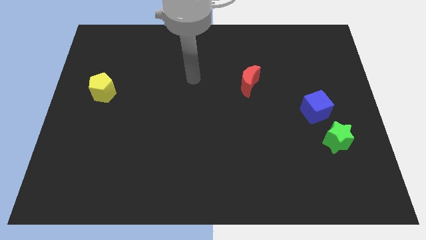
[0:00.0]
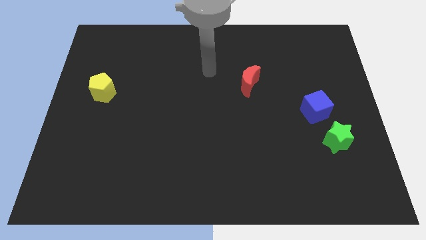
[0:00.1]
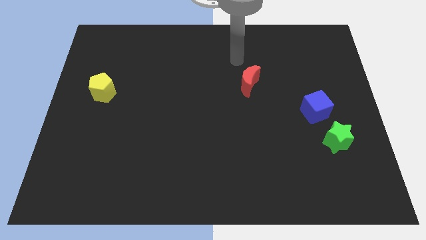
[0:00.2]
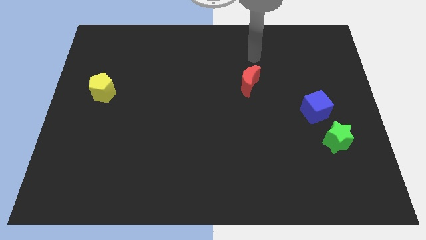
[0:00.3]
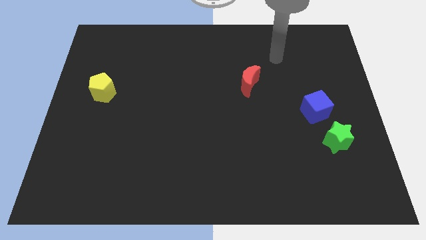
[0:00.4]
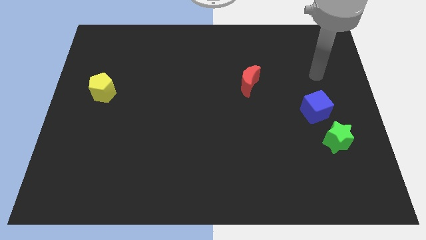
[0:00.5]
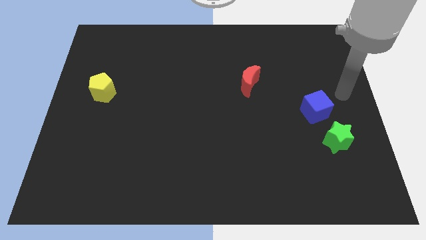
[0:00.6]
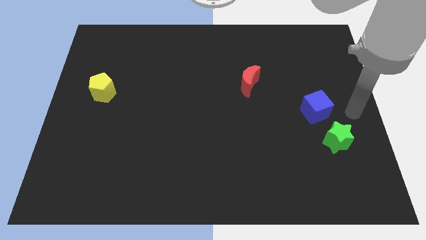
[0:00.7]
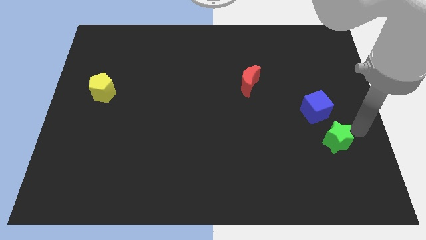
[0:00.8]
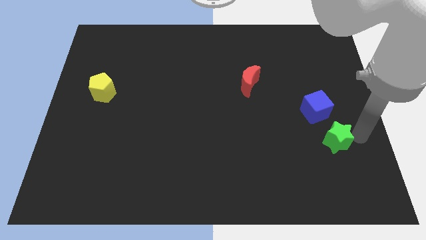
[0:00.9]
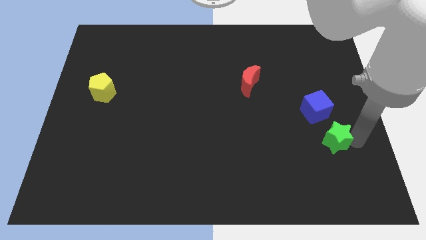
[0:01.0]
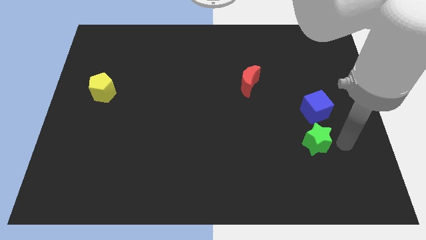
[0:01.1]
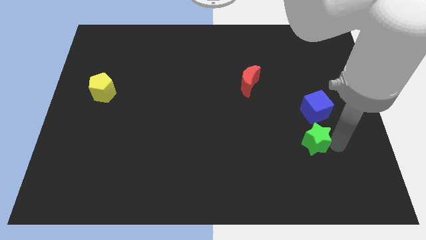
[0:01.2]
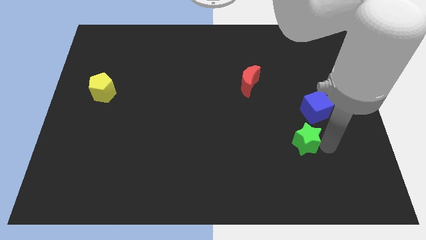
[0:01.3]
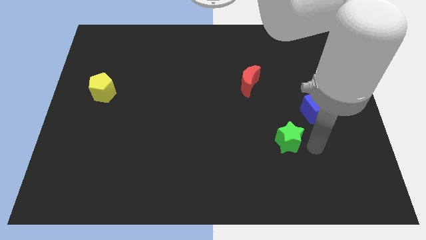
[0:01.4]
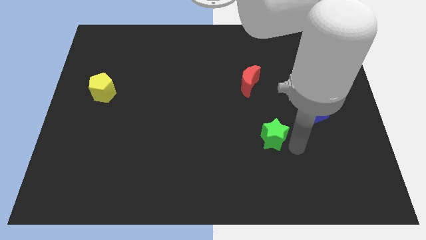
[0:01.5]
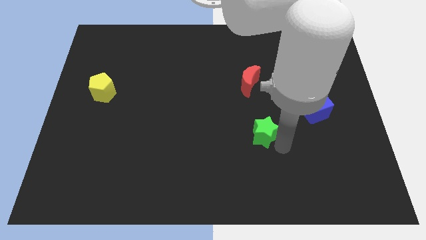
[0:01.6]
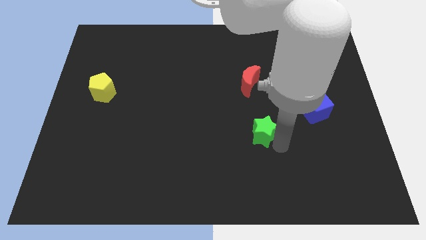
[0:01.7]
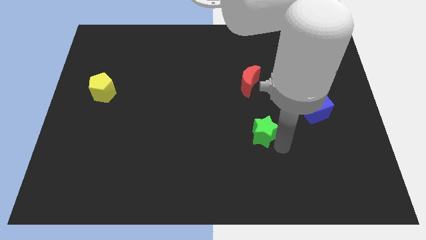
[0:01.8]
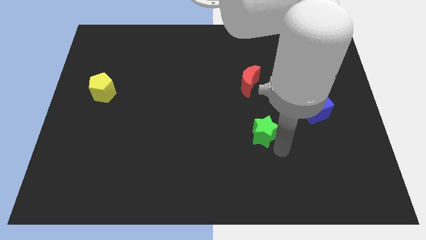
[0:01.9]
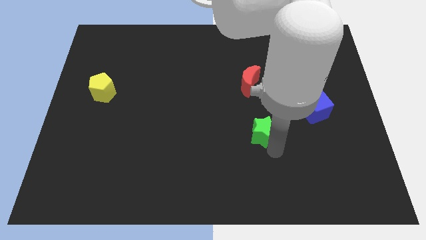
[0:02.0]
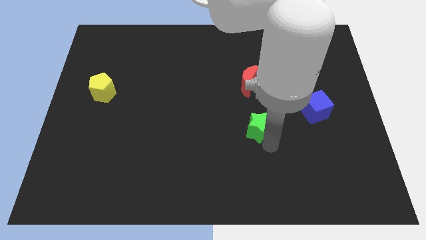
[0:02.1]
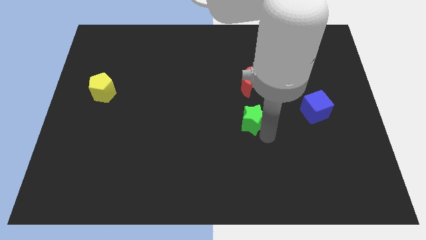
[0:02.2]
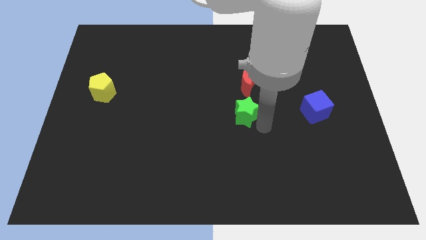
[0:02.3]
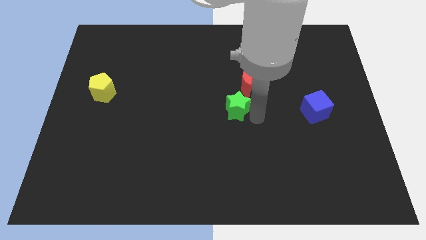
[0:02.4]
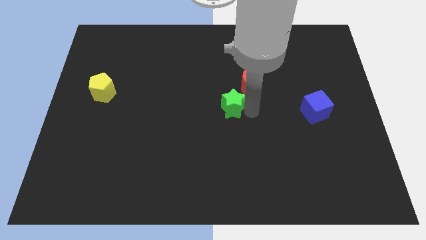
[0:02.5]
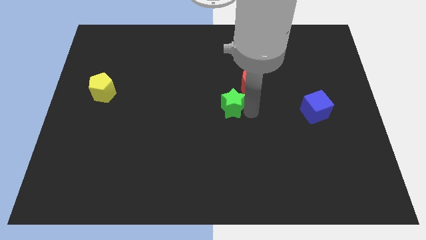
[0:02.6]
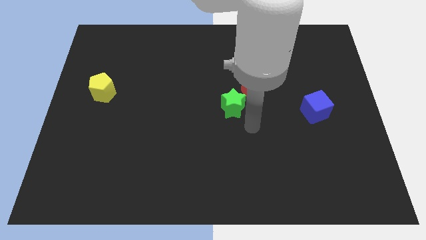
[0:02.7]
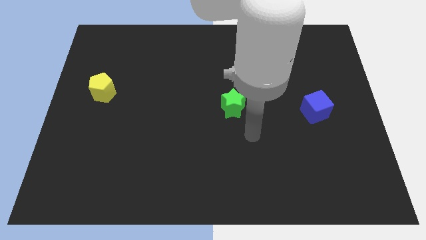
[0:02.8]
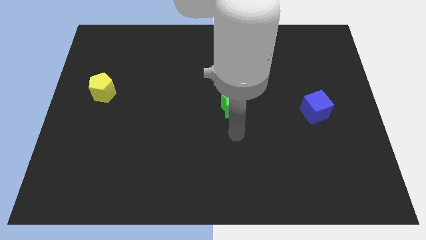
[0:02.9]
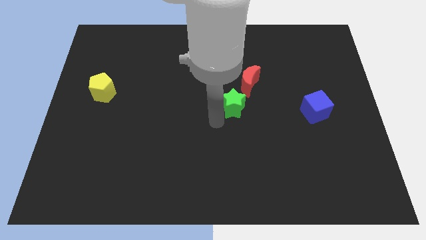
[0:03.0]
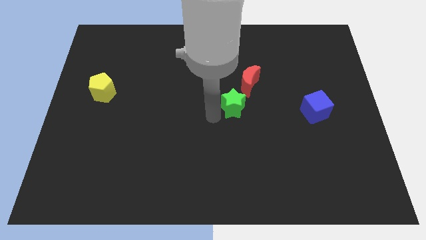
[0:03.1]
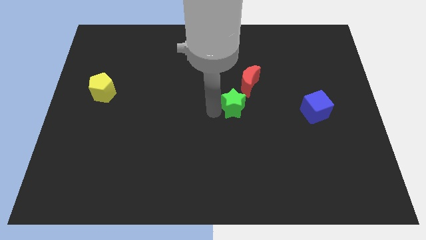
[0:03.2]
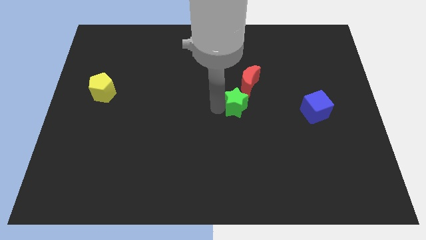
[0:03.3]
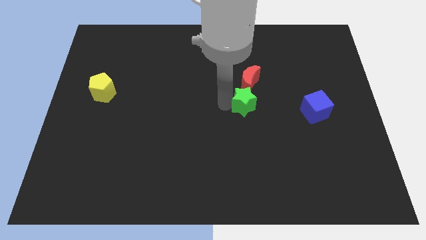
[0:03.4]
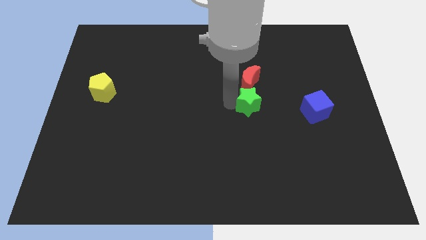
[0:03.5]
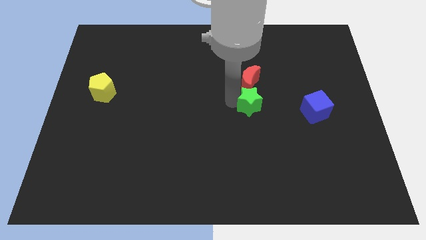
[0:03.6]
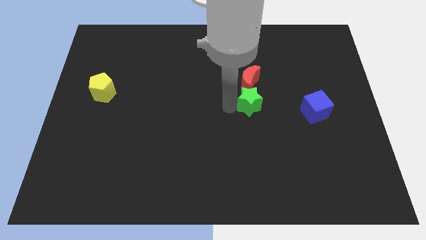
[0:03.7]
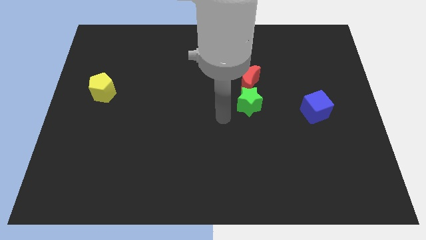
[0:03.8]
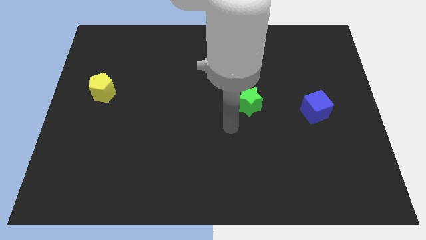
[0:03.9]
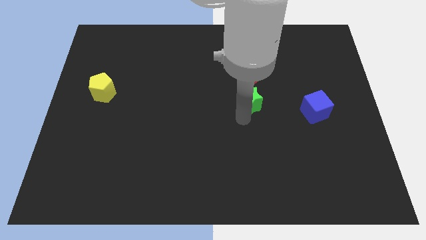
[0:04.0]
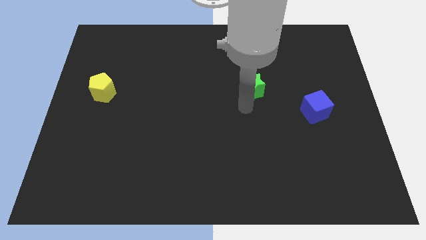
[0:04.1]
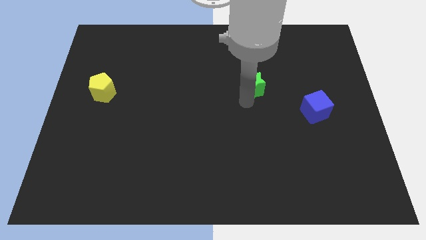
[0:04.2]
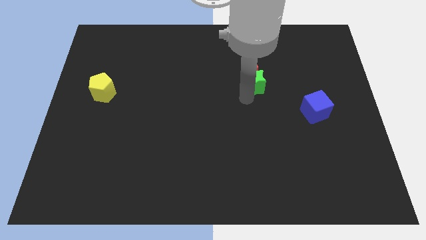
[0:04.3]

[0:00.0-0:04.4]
slide the green star close to the red block

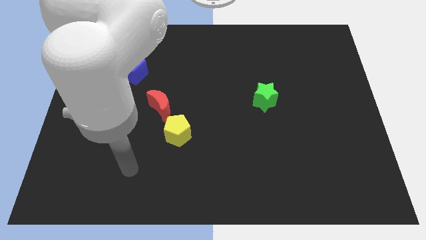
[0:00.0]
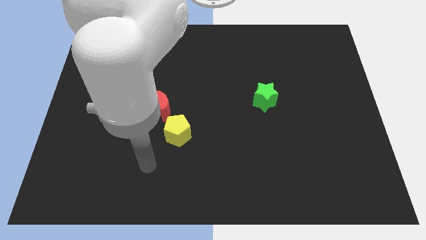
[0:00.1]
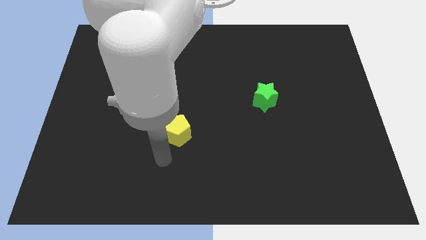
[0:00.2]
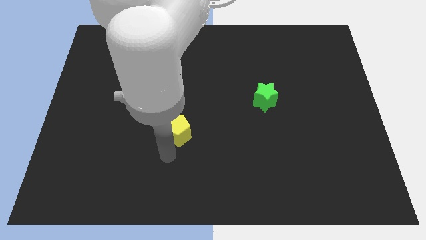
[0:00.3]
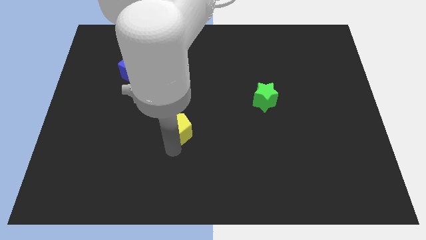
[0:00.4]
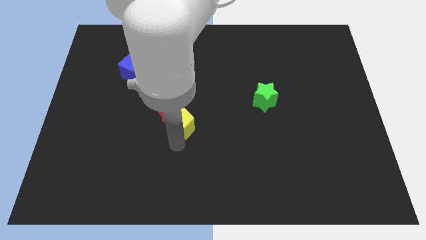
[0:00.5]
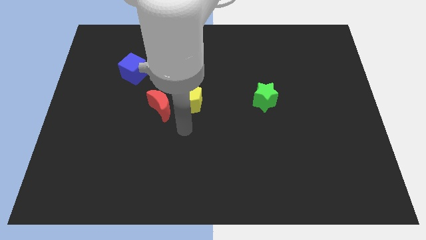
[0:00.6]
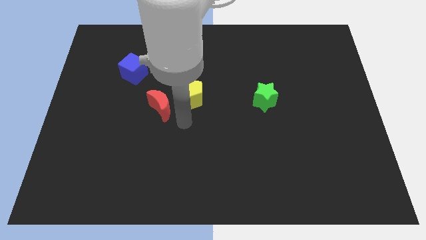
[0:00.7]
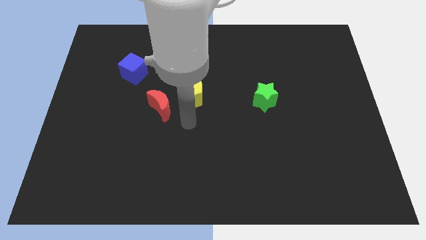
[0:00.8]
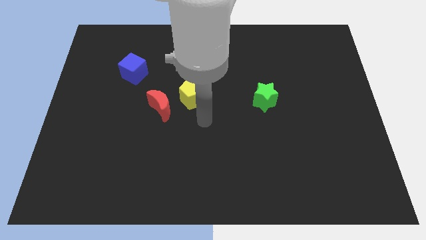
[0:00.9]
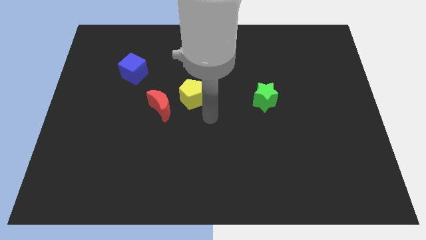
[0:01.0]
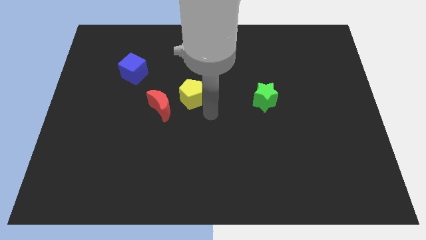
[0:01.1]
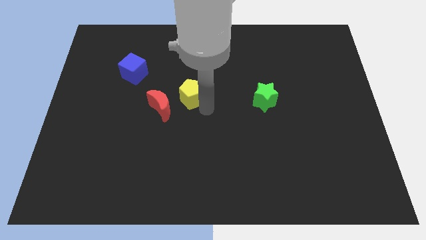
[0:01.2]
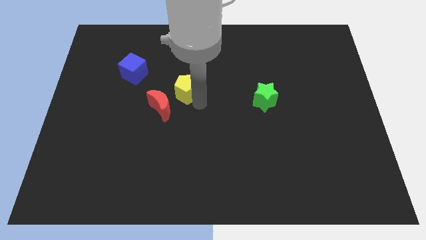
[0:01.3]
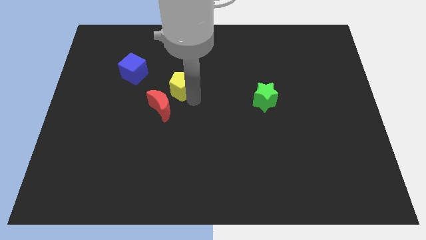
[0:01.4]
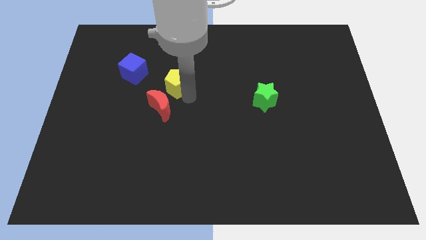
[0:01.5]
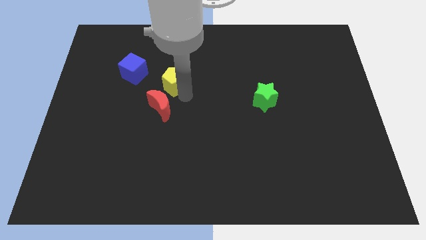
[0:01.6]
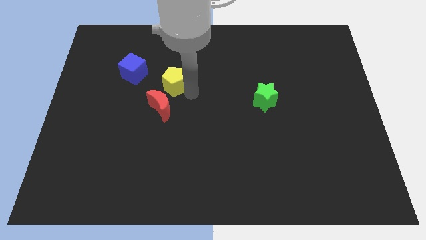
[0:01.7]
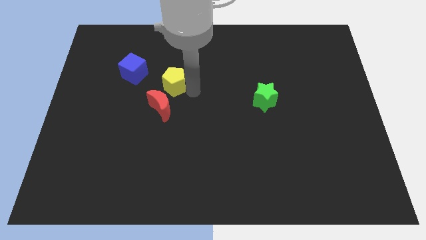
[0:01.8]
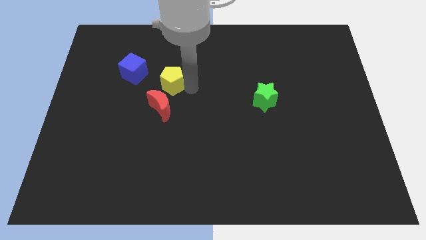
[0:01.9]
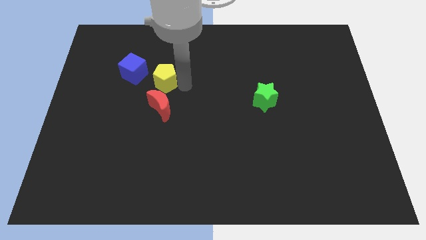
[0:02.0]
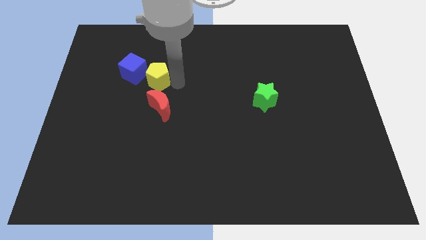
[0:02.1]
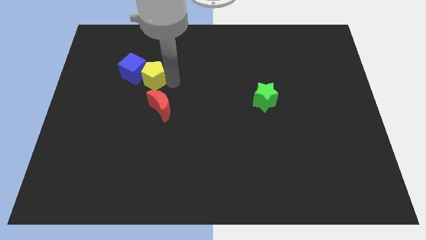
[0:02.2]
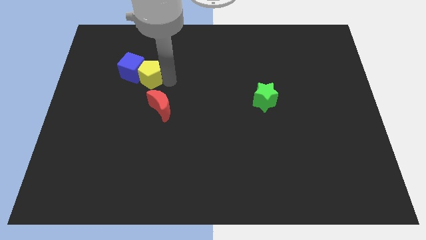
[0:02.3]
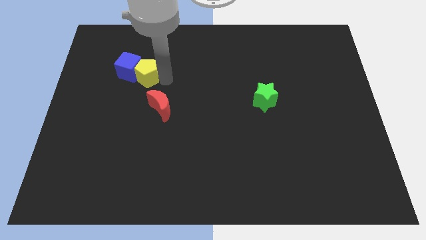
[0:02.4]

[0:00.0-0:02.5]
move the yellow pentagon next to the cube

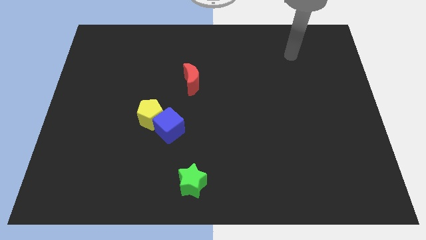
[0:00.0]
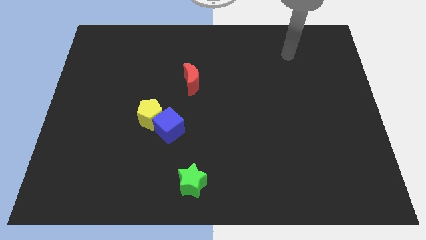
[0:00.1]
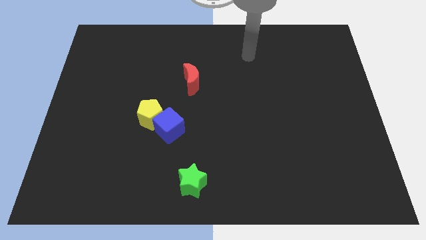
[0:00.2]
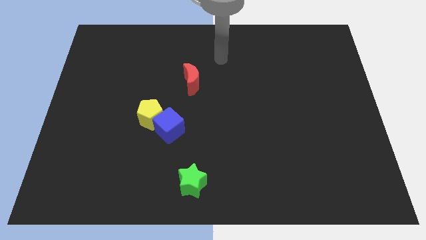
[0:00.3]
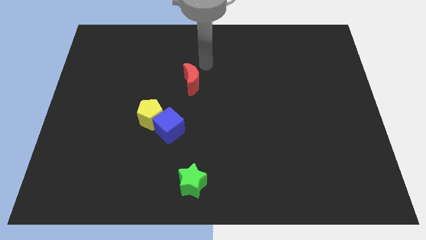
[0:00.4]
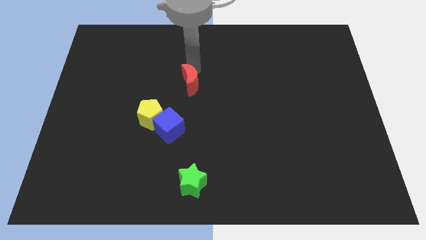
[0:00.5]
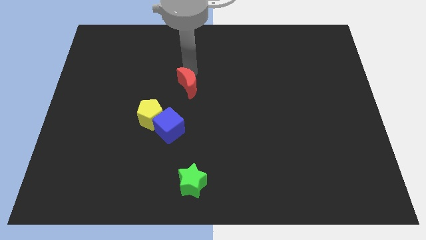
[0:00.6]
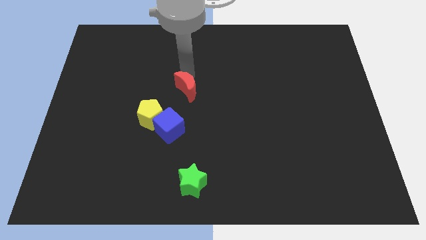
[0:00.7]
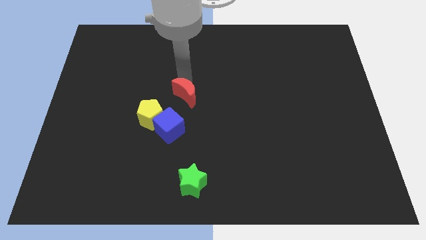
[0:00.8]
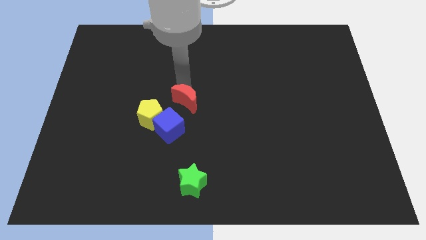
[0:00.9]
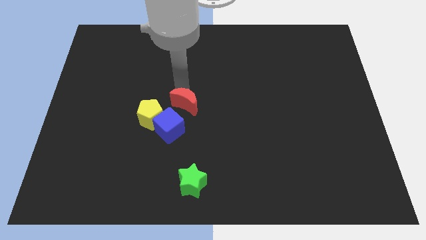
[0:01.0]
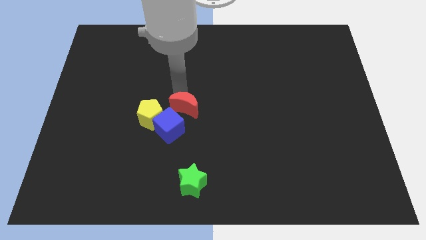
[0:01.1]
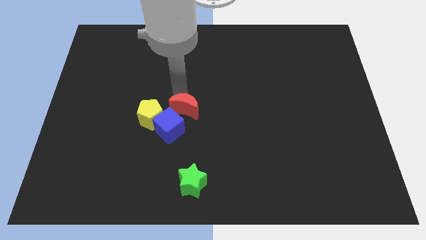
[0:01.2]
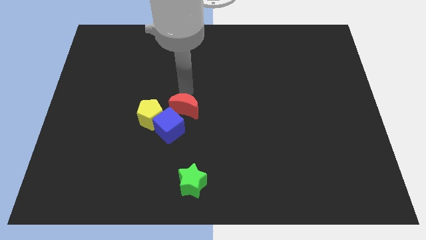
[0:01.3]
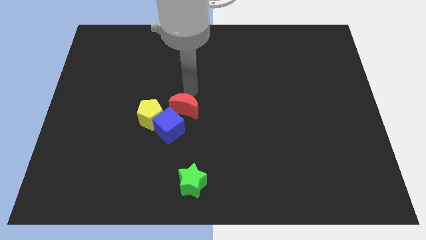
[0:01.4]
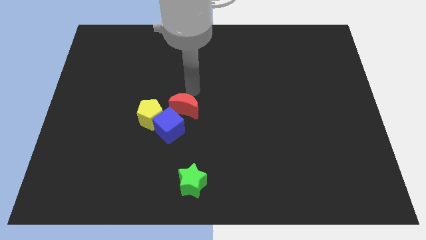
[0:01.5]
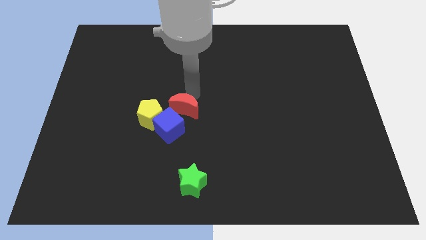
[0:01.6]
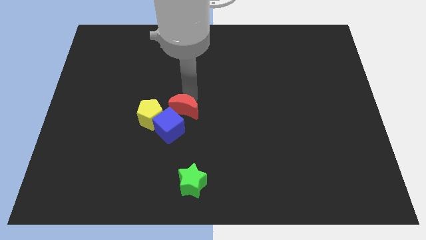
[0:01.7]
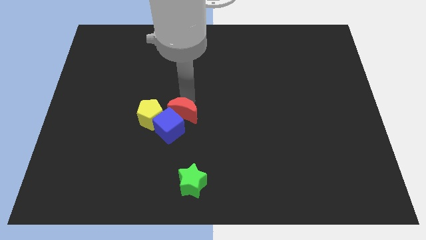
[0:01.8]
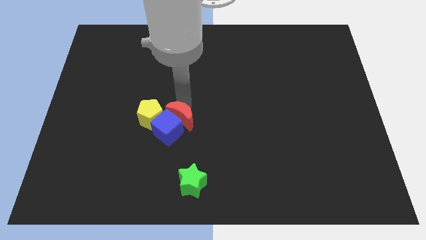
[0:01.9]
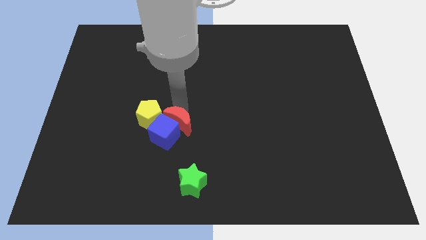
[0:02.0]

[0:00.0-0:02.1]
put the red block towards the blue cube
